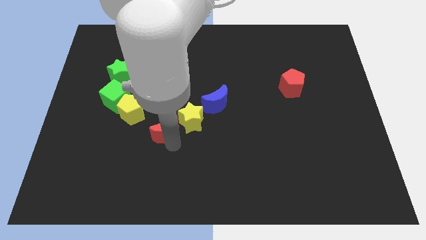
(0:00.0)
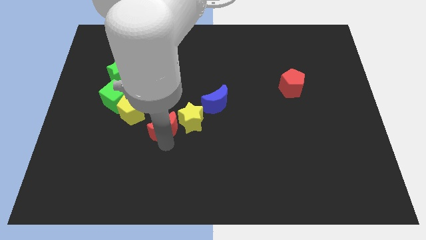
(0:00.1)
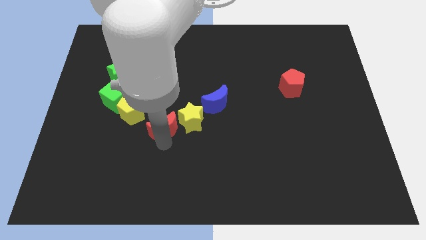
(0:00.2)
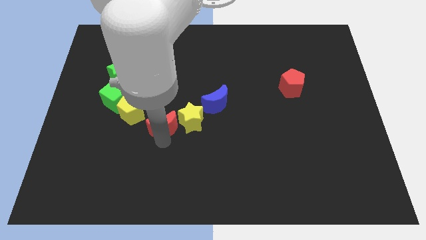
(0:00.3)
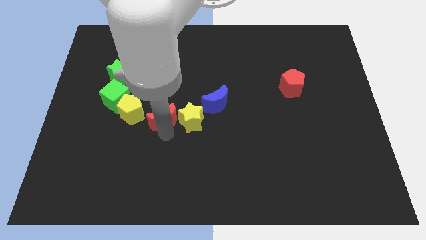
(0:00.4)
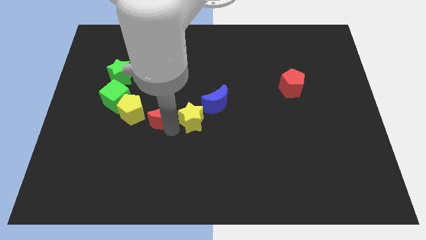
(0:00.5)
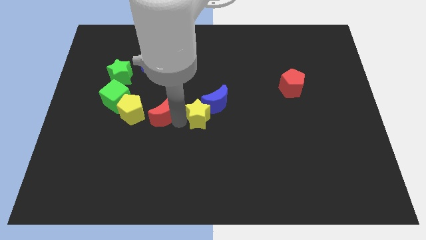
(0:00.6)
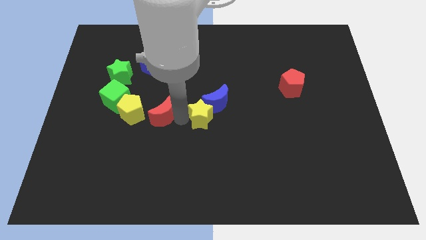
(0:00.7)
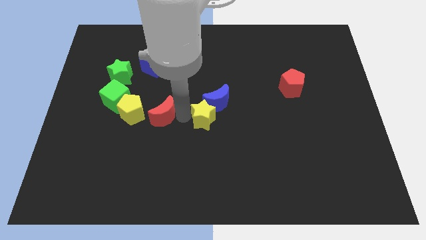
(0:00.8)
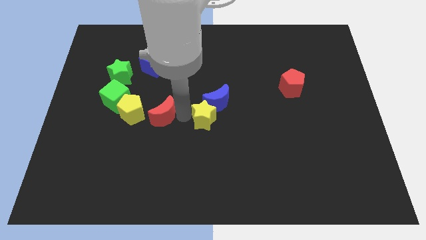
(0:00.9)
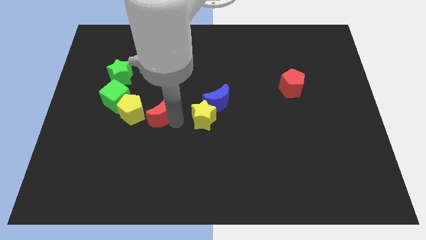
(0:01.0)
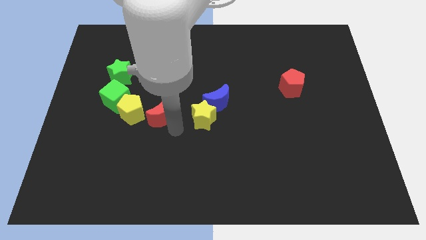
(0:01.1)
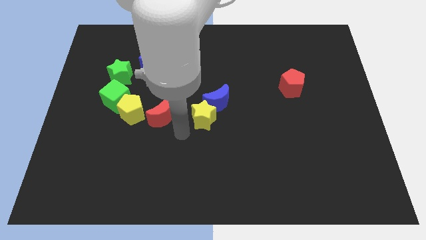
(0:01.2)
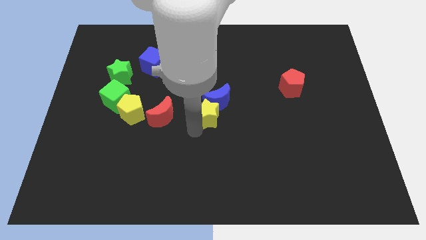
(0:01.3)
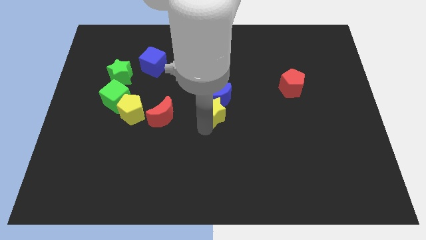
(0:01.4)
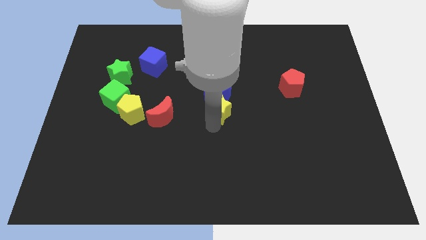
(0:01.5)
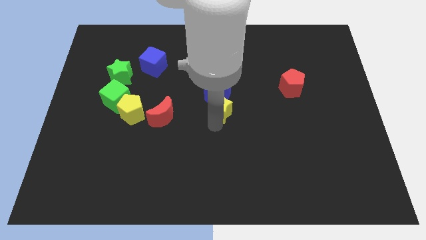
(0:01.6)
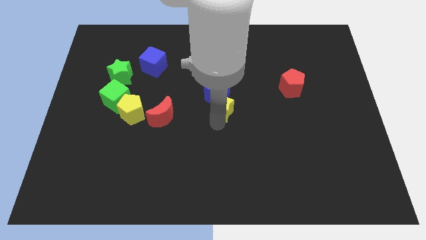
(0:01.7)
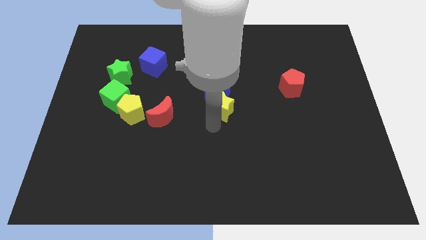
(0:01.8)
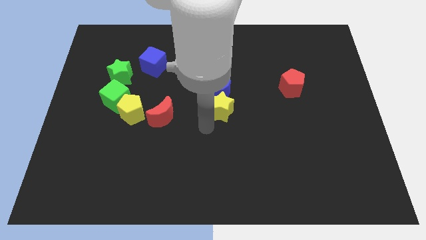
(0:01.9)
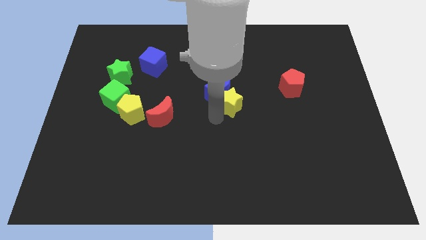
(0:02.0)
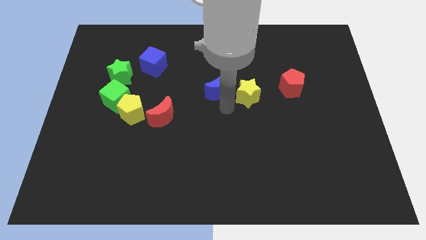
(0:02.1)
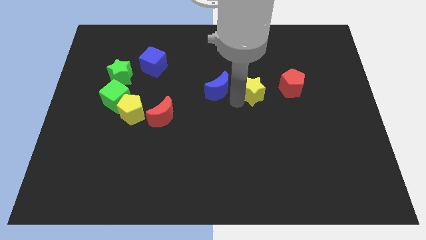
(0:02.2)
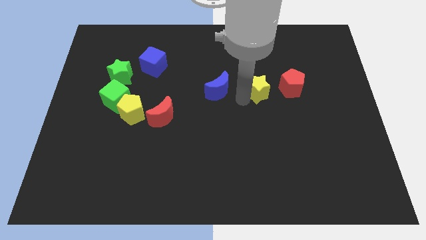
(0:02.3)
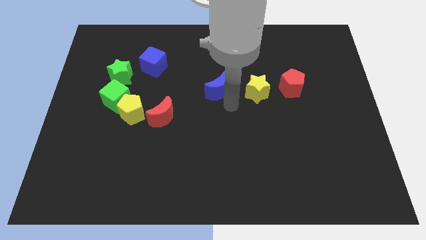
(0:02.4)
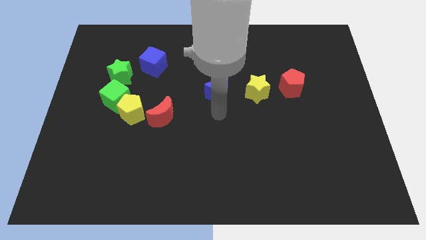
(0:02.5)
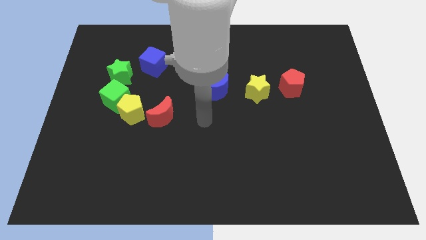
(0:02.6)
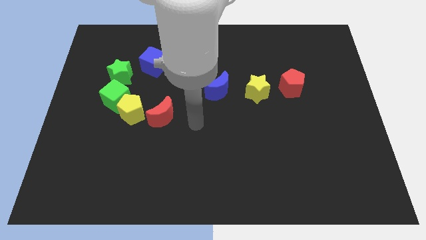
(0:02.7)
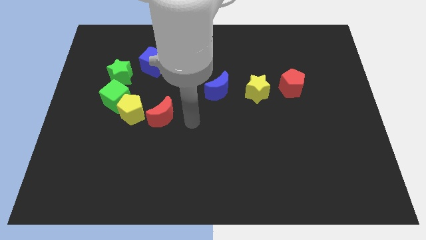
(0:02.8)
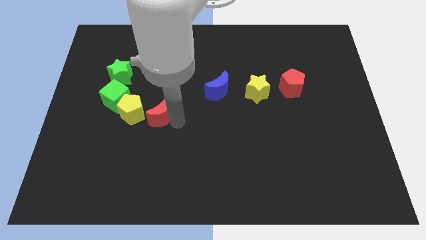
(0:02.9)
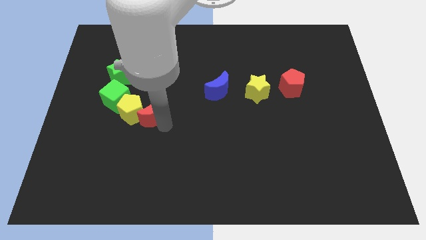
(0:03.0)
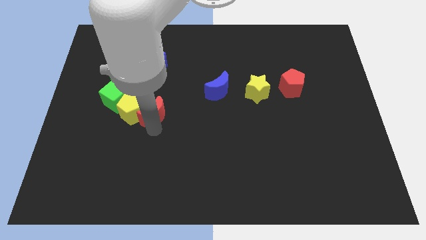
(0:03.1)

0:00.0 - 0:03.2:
place the yellow star in between the blue crescent and red pentagon

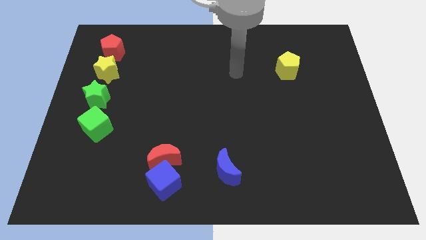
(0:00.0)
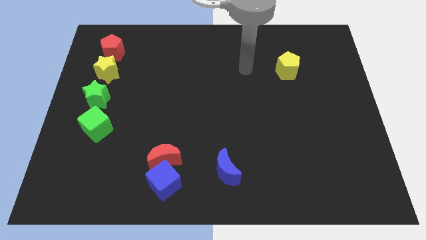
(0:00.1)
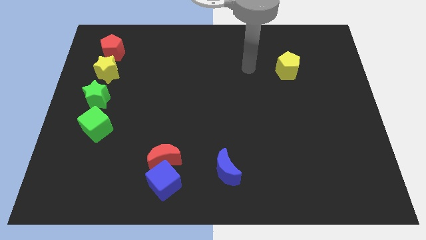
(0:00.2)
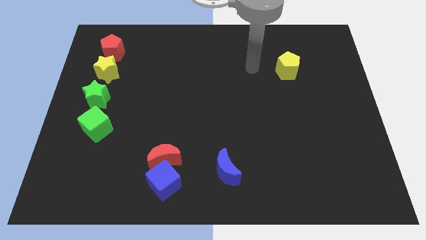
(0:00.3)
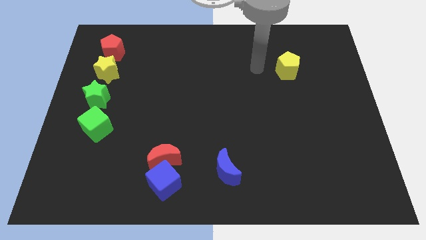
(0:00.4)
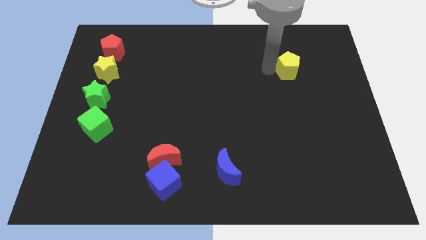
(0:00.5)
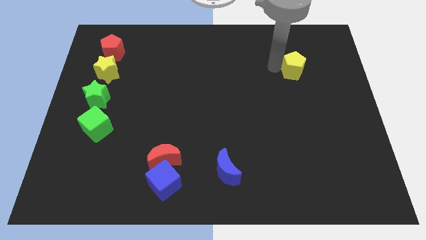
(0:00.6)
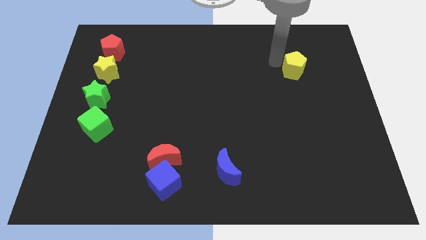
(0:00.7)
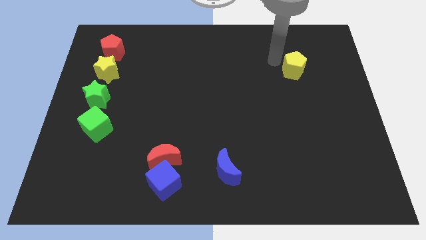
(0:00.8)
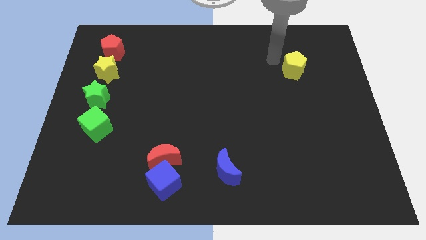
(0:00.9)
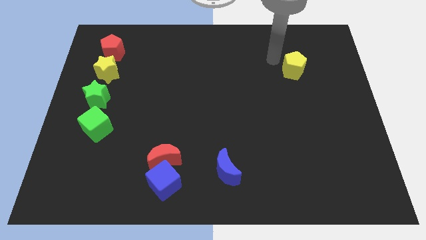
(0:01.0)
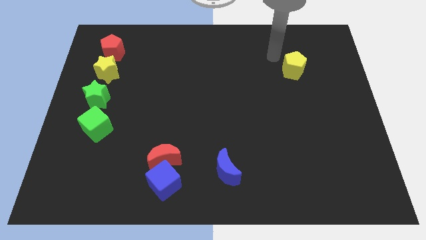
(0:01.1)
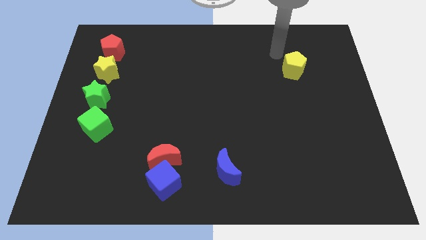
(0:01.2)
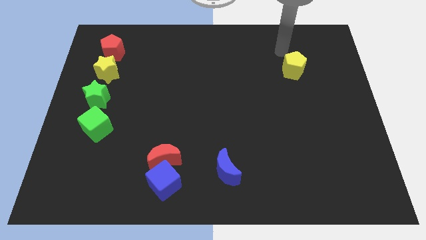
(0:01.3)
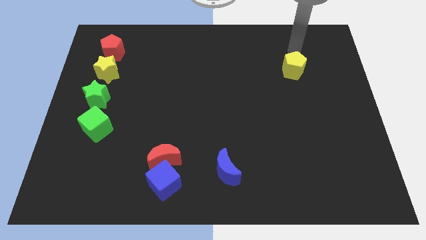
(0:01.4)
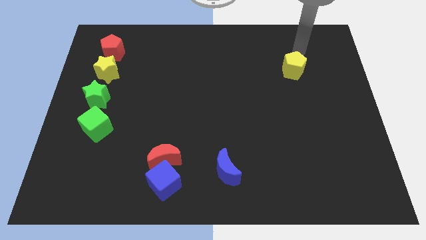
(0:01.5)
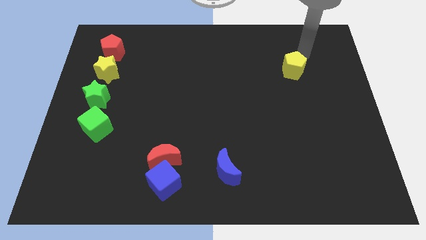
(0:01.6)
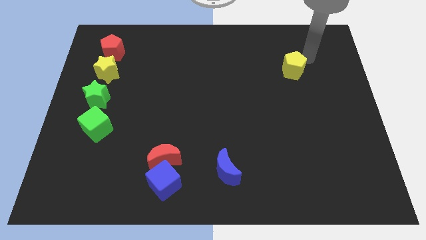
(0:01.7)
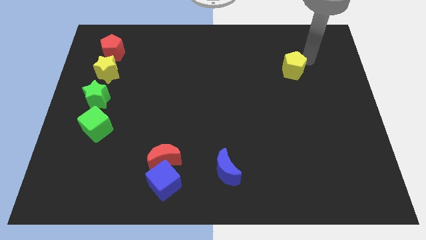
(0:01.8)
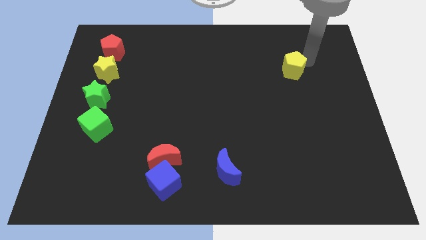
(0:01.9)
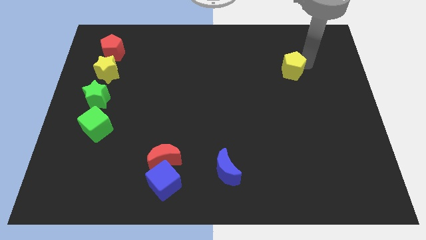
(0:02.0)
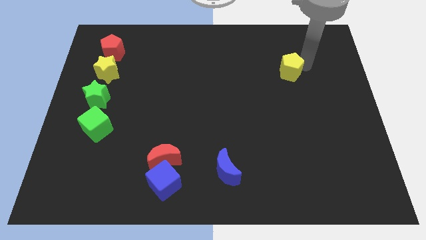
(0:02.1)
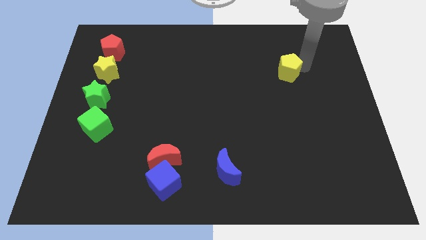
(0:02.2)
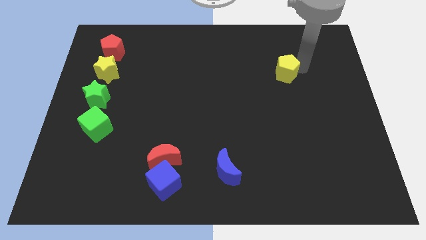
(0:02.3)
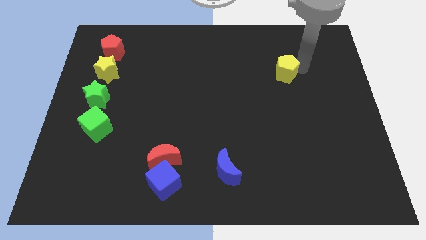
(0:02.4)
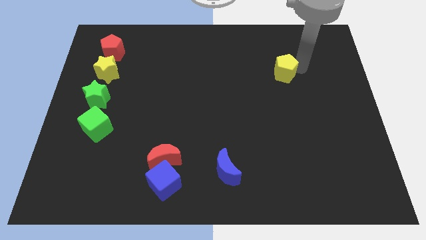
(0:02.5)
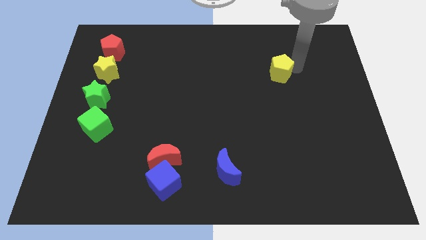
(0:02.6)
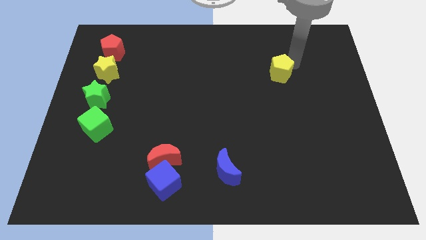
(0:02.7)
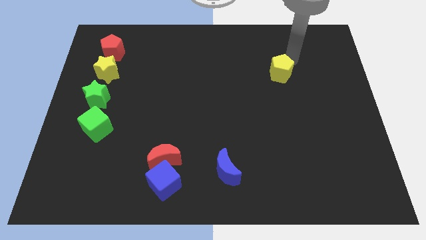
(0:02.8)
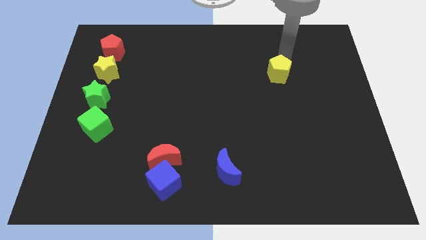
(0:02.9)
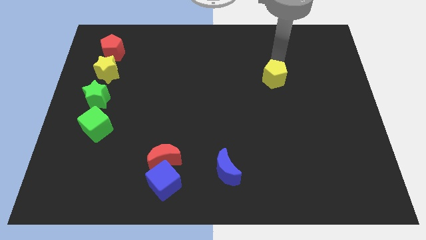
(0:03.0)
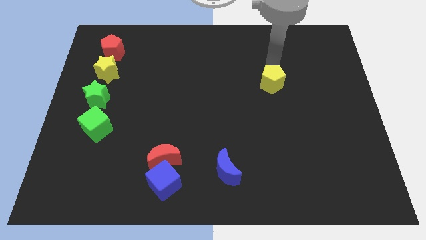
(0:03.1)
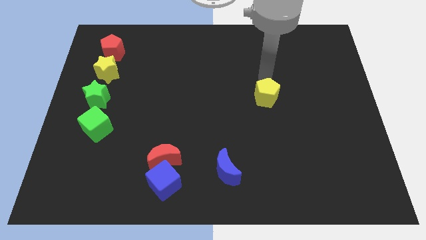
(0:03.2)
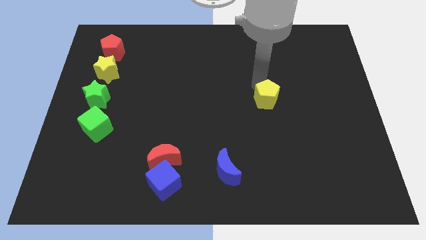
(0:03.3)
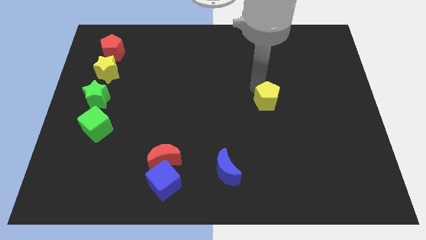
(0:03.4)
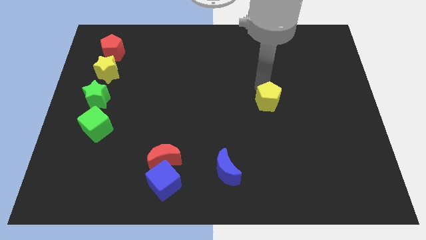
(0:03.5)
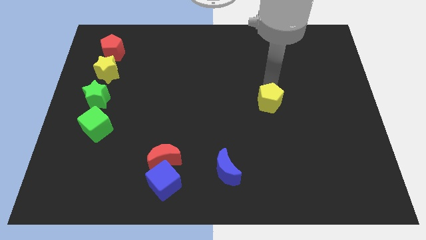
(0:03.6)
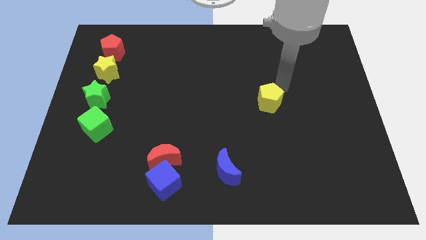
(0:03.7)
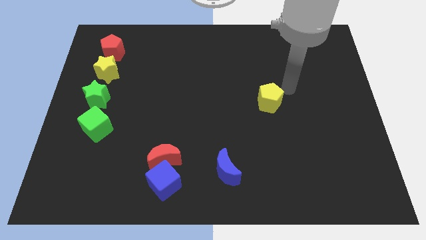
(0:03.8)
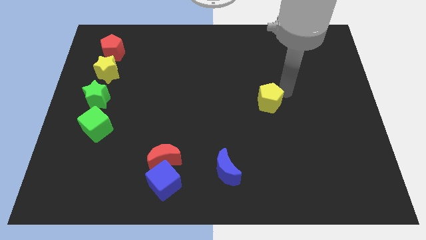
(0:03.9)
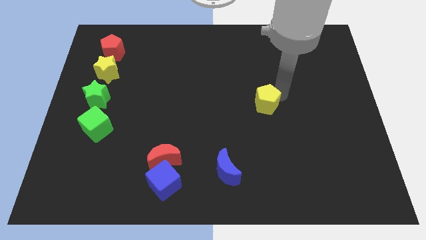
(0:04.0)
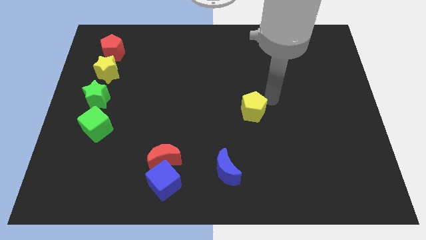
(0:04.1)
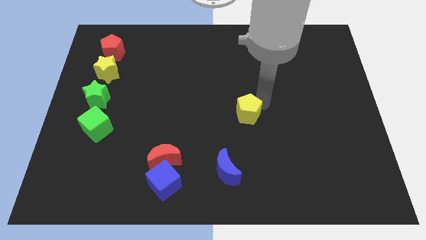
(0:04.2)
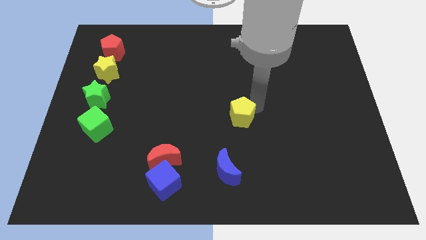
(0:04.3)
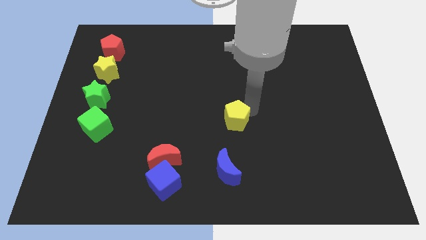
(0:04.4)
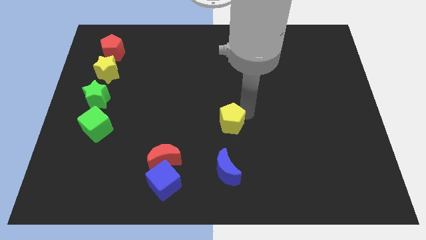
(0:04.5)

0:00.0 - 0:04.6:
push the yellow pentagon towards the center of the board

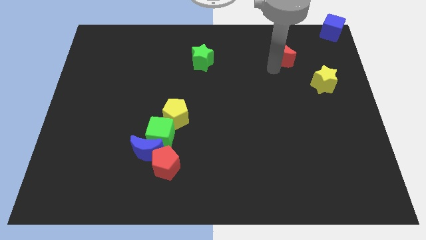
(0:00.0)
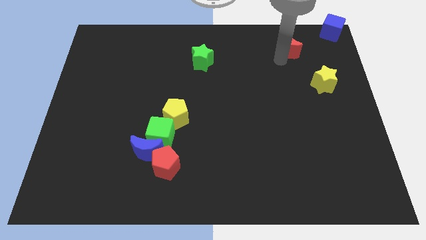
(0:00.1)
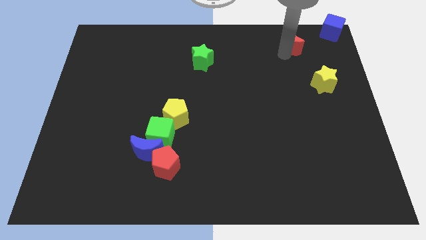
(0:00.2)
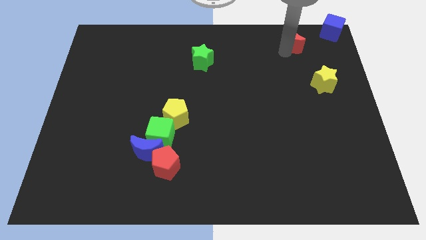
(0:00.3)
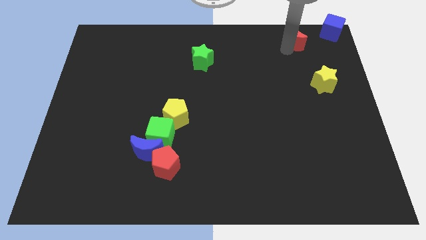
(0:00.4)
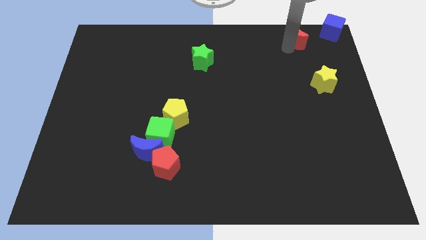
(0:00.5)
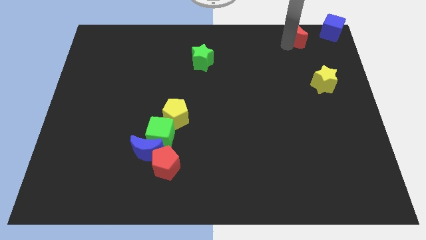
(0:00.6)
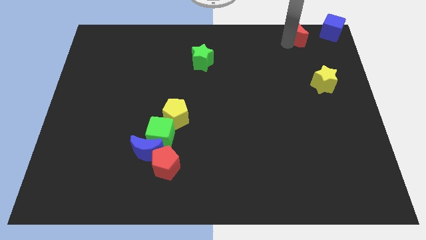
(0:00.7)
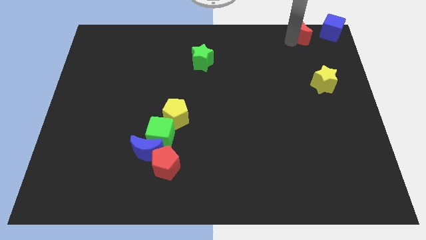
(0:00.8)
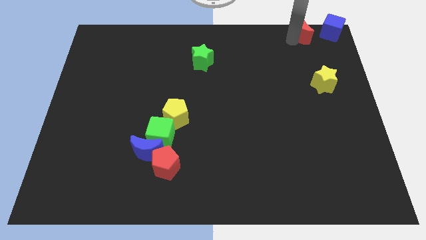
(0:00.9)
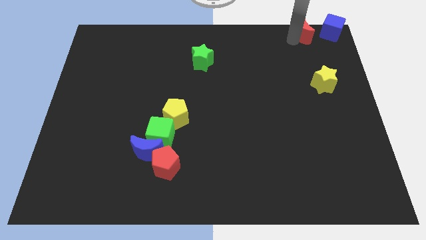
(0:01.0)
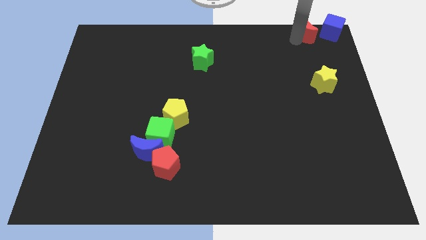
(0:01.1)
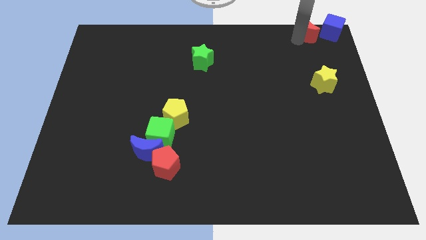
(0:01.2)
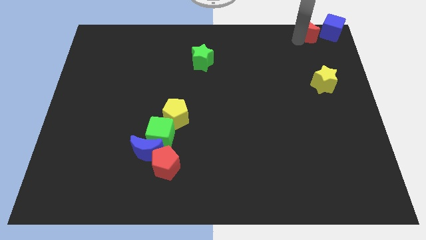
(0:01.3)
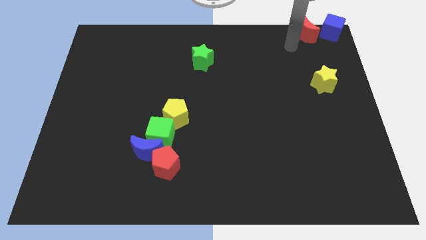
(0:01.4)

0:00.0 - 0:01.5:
push the red crescent towards the left to the blue cube
